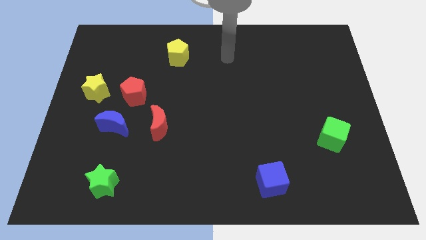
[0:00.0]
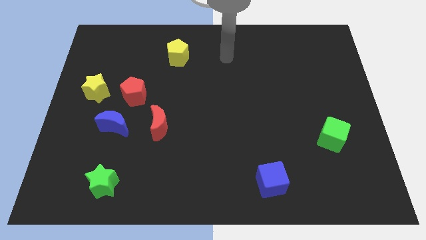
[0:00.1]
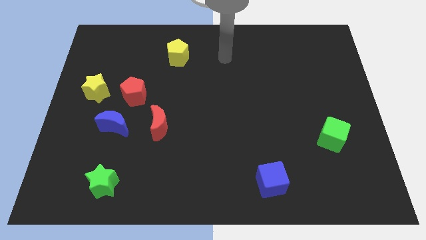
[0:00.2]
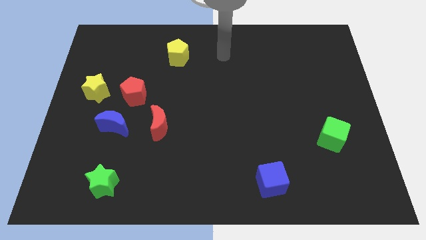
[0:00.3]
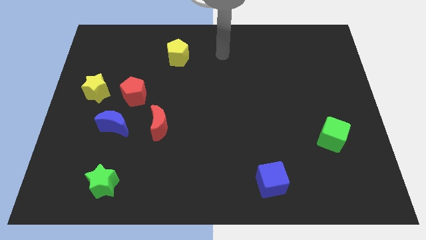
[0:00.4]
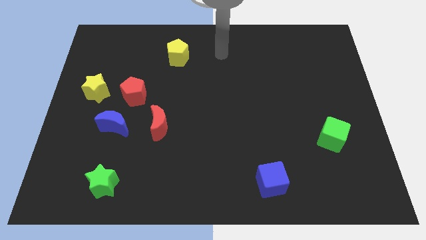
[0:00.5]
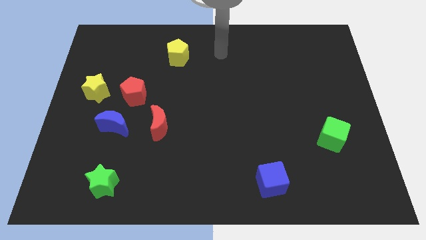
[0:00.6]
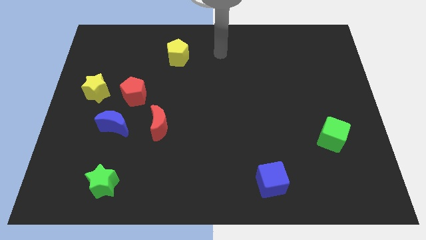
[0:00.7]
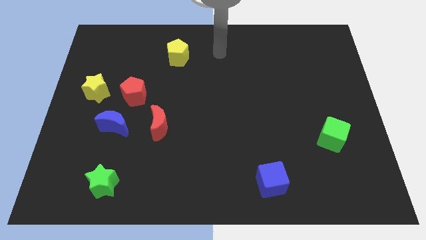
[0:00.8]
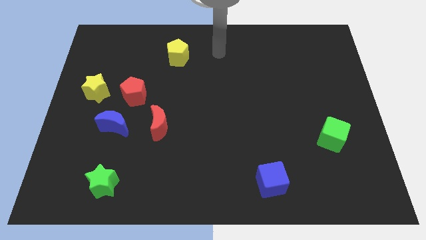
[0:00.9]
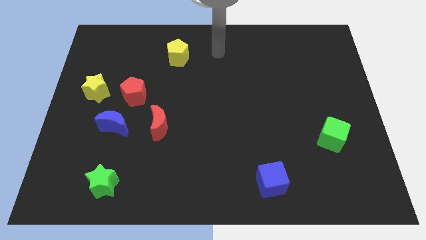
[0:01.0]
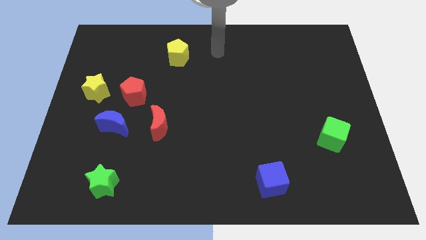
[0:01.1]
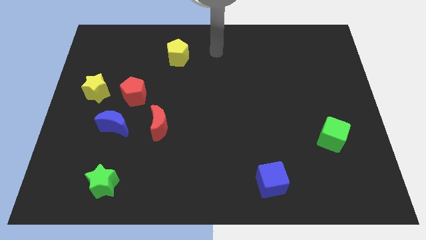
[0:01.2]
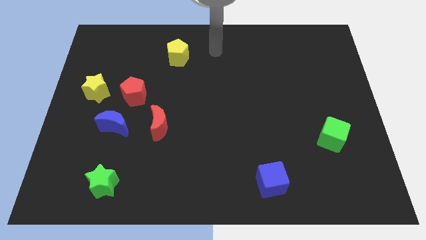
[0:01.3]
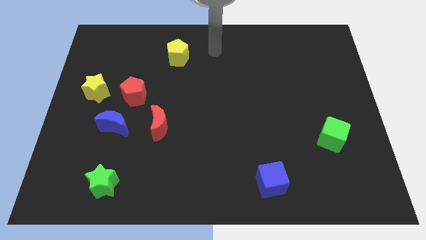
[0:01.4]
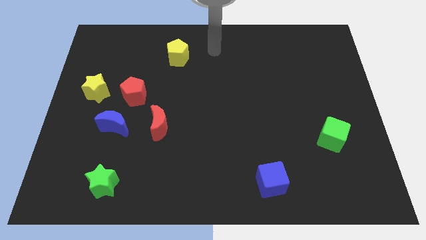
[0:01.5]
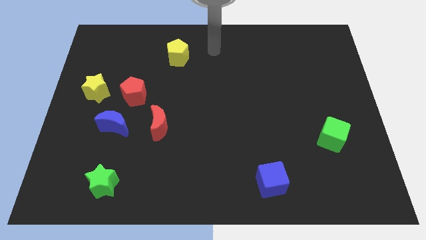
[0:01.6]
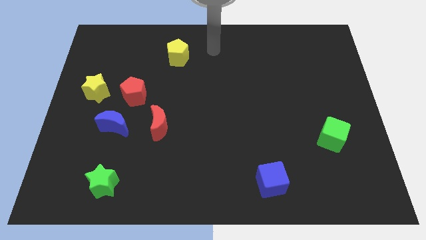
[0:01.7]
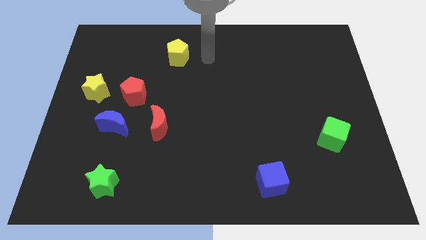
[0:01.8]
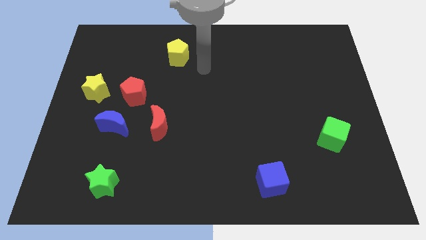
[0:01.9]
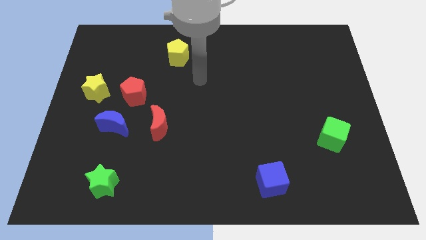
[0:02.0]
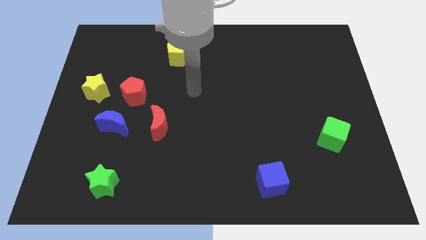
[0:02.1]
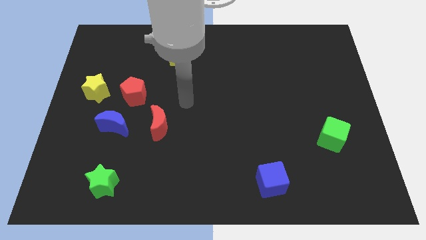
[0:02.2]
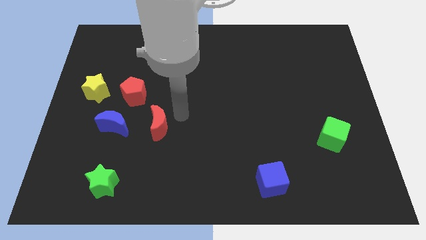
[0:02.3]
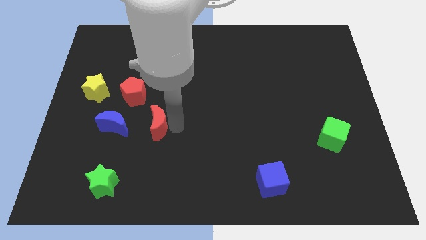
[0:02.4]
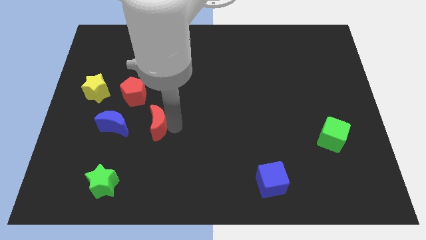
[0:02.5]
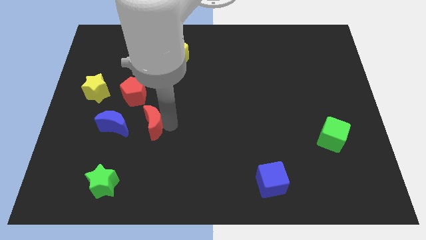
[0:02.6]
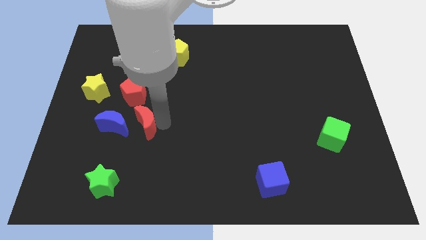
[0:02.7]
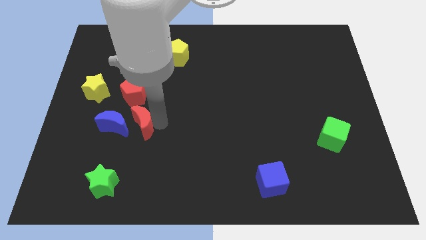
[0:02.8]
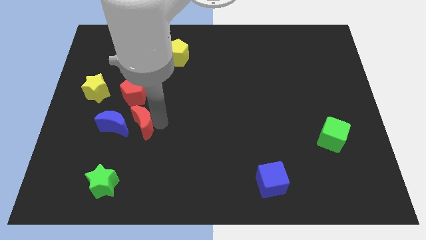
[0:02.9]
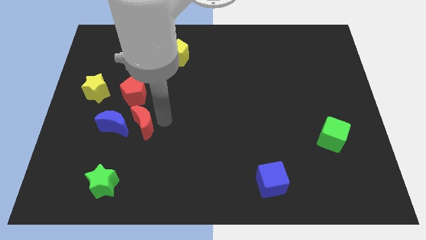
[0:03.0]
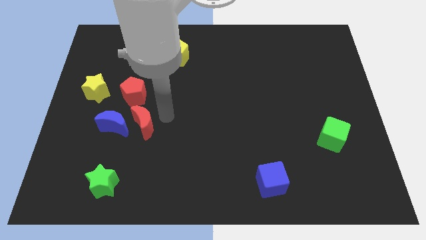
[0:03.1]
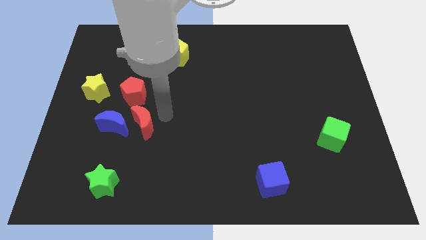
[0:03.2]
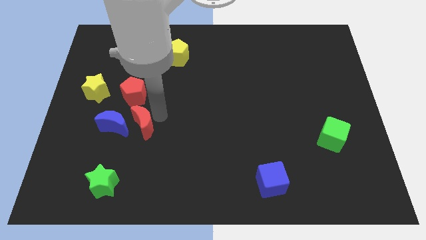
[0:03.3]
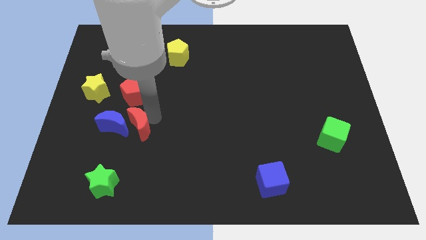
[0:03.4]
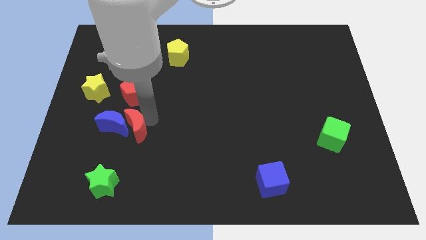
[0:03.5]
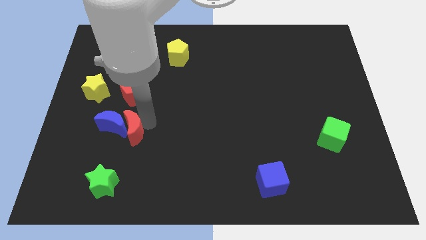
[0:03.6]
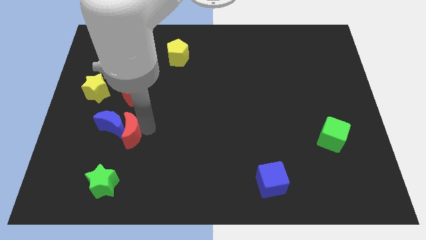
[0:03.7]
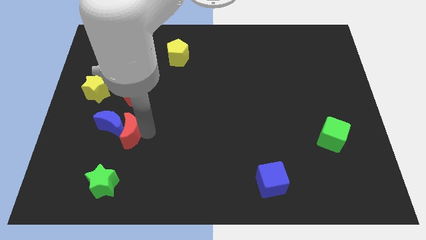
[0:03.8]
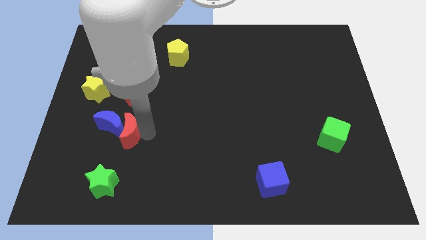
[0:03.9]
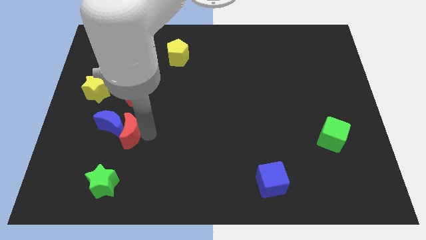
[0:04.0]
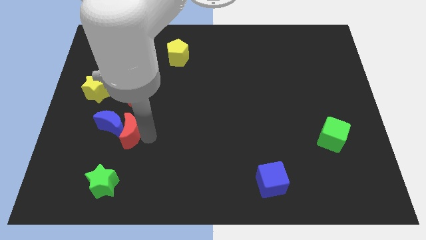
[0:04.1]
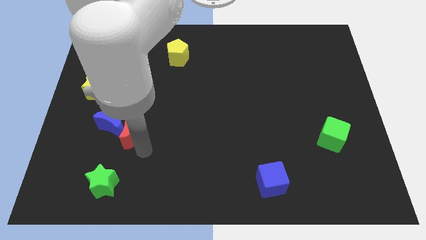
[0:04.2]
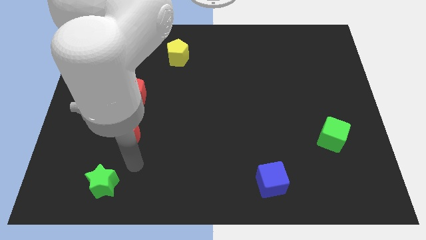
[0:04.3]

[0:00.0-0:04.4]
push the red crescent into blue crescent

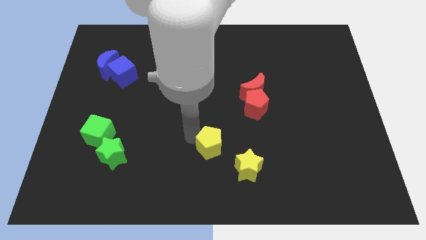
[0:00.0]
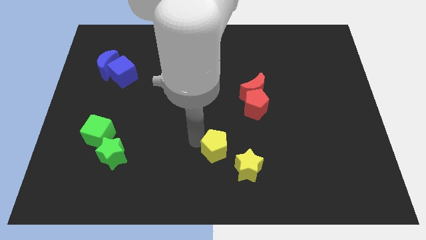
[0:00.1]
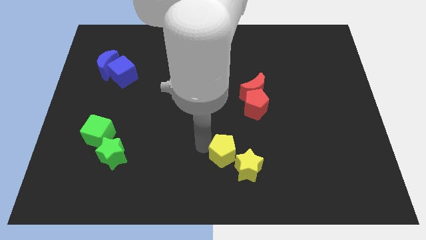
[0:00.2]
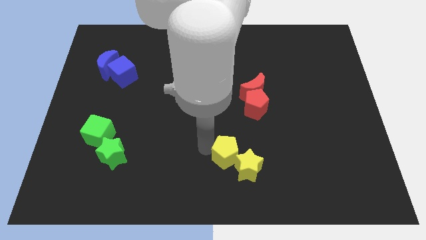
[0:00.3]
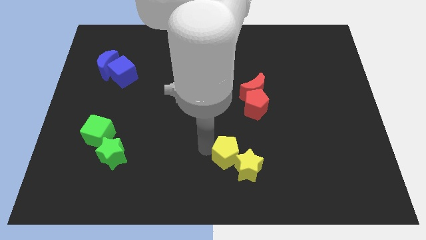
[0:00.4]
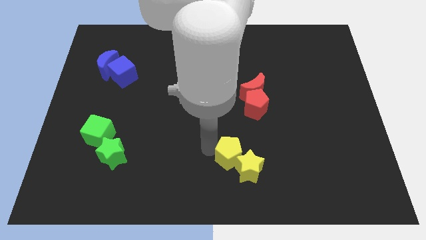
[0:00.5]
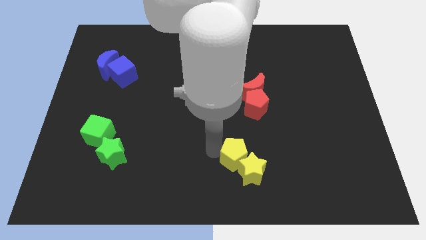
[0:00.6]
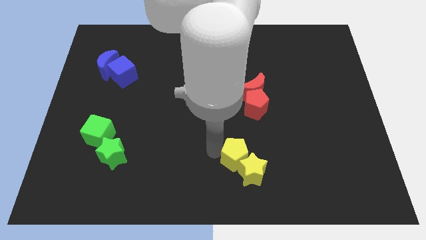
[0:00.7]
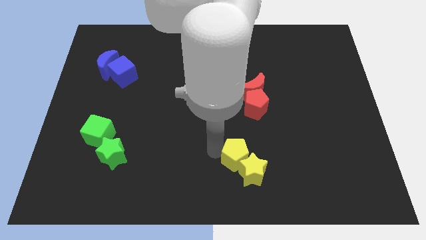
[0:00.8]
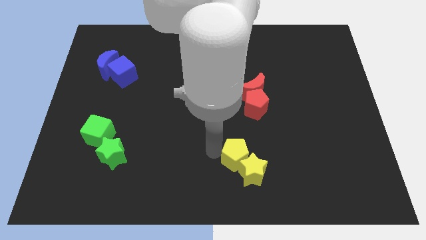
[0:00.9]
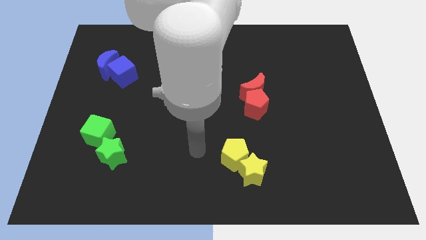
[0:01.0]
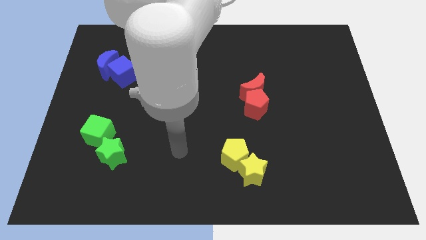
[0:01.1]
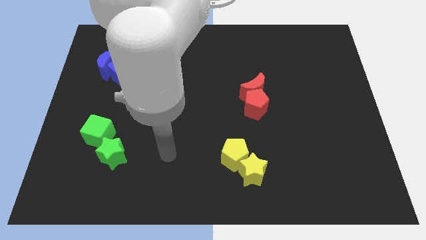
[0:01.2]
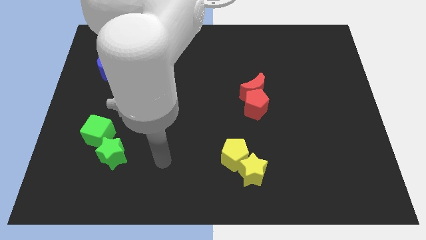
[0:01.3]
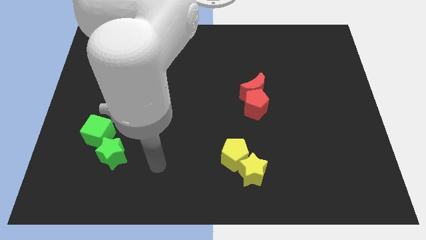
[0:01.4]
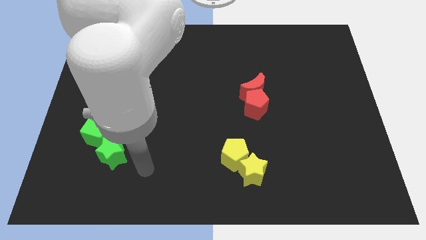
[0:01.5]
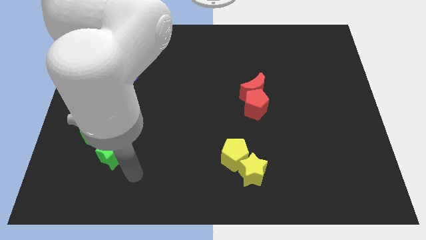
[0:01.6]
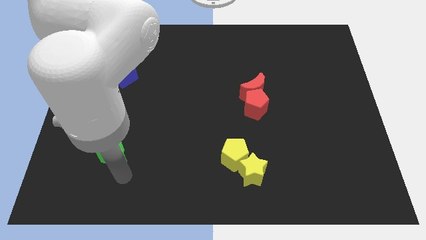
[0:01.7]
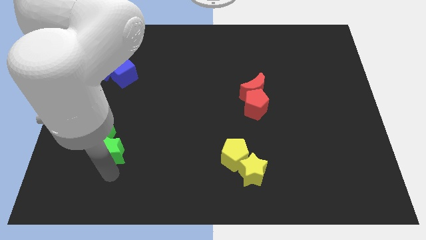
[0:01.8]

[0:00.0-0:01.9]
push the yellow pentagon to the top left of the yellow star

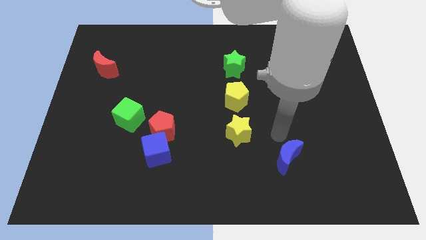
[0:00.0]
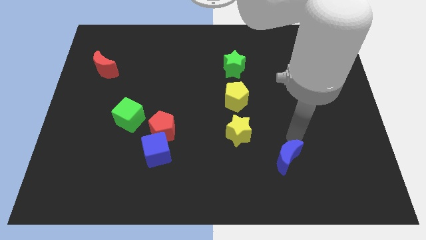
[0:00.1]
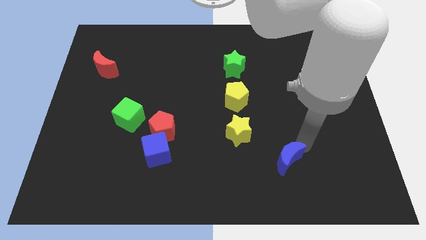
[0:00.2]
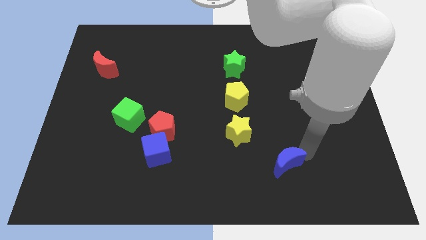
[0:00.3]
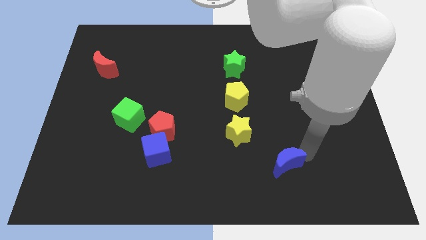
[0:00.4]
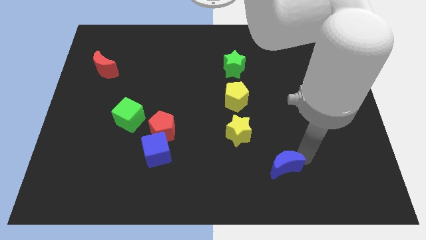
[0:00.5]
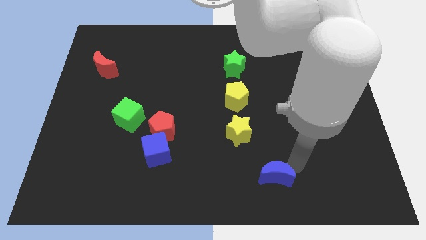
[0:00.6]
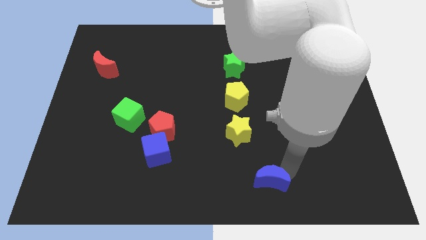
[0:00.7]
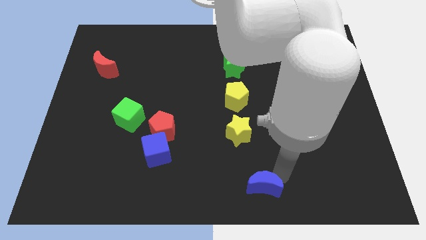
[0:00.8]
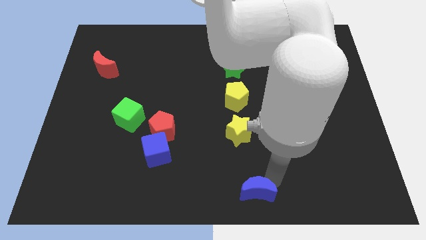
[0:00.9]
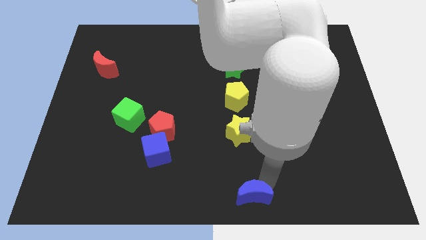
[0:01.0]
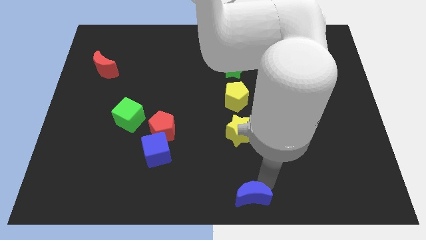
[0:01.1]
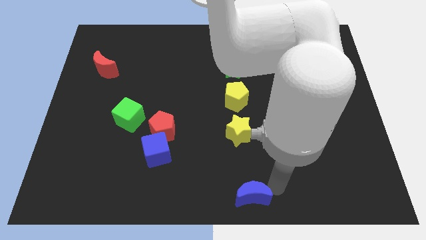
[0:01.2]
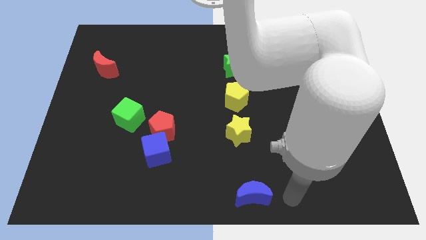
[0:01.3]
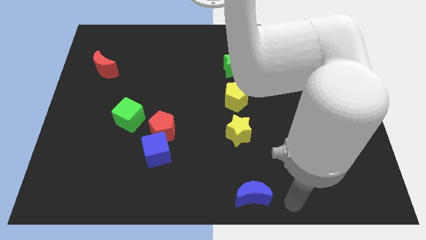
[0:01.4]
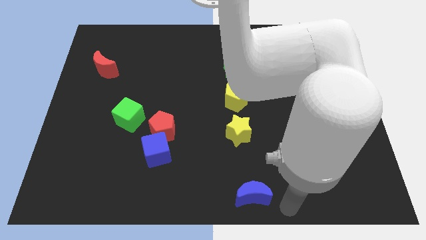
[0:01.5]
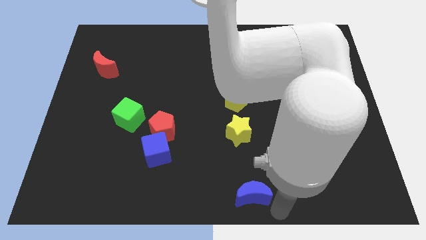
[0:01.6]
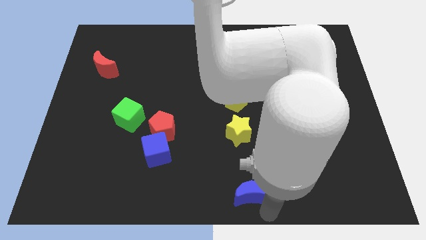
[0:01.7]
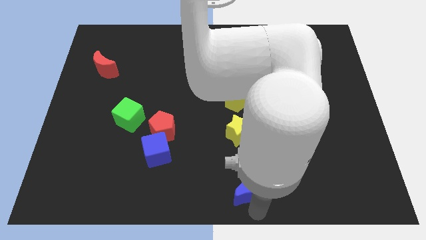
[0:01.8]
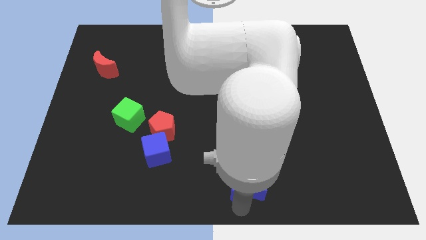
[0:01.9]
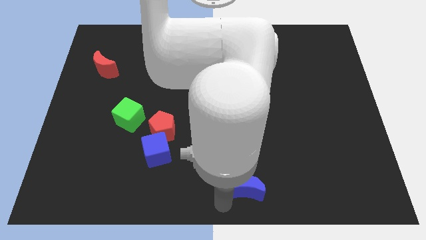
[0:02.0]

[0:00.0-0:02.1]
move the blue crescent to the bottom of the yellow star

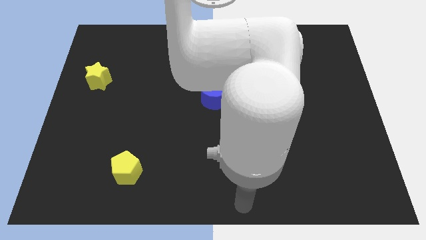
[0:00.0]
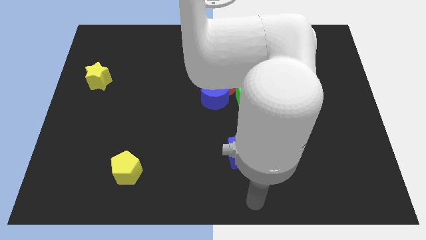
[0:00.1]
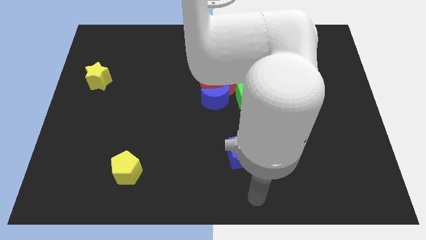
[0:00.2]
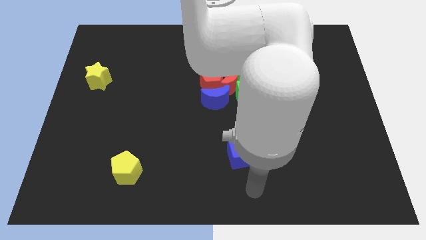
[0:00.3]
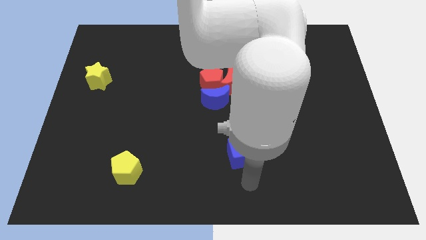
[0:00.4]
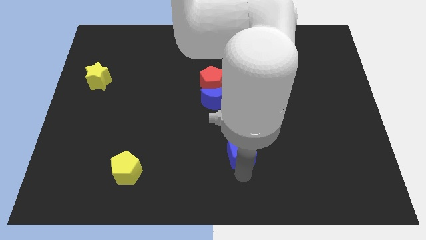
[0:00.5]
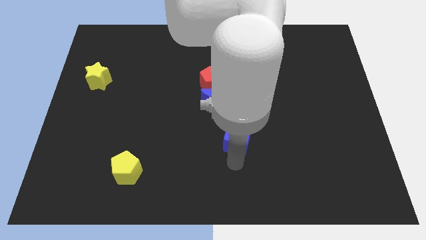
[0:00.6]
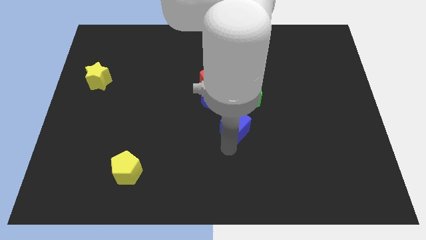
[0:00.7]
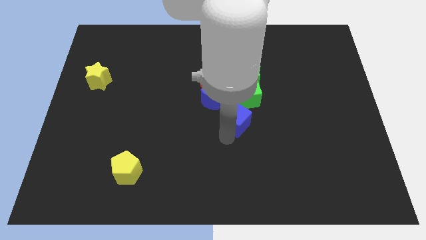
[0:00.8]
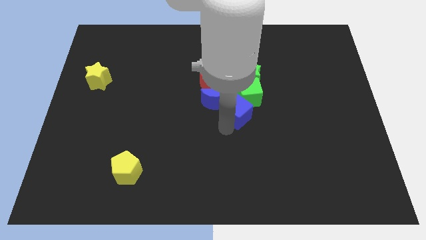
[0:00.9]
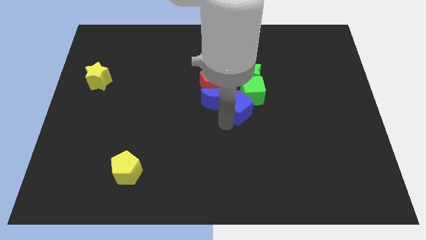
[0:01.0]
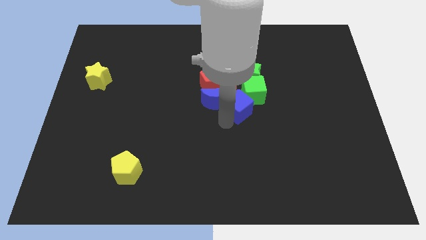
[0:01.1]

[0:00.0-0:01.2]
push the blue cube into the group of blocks
